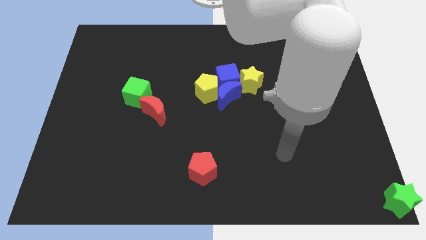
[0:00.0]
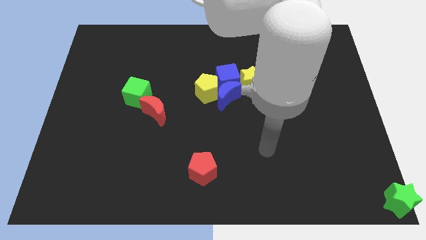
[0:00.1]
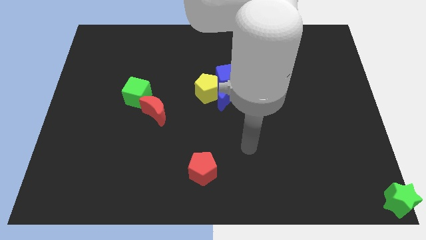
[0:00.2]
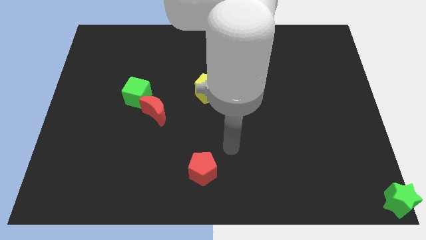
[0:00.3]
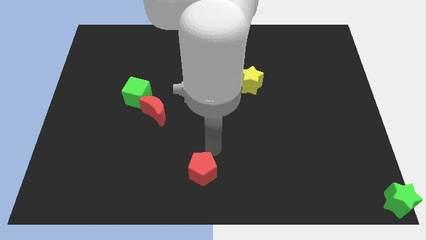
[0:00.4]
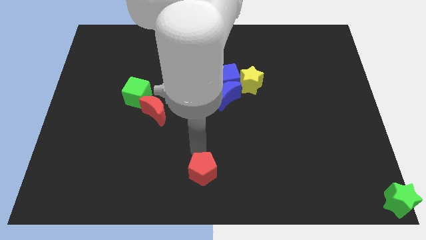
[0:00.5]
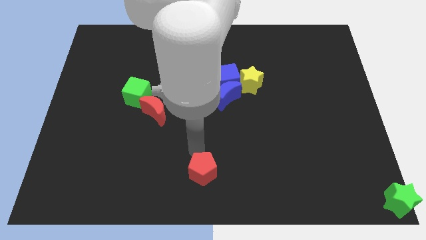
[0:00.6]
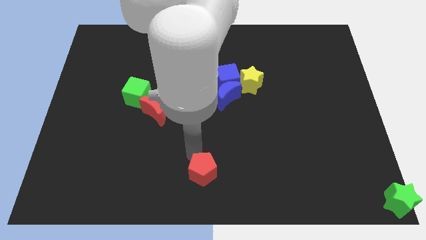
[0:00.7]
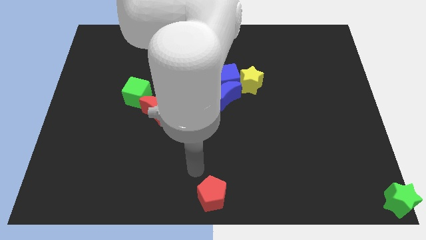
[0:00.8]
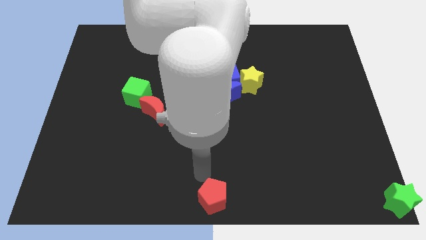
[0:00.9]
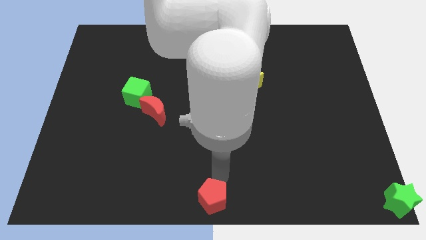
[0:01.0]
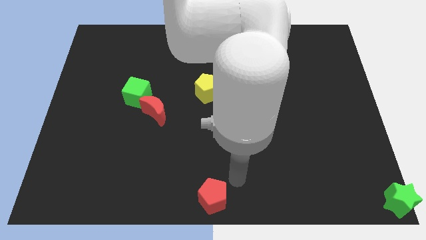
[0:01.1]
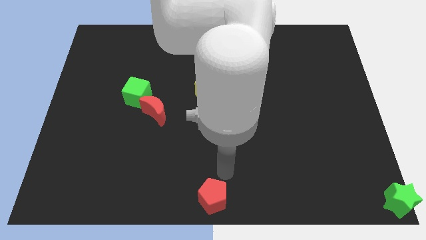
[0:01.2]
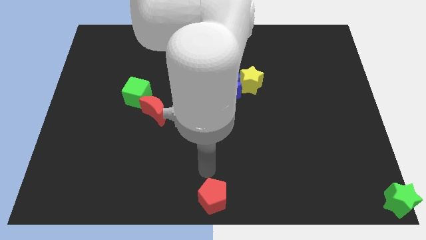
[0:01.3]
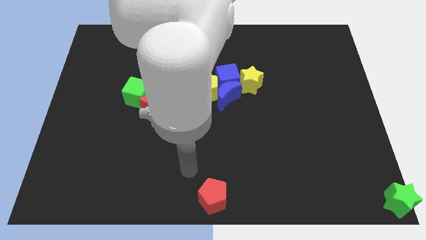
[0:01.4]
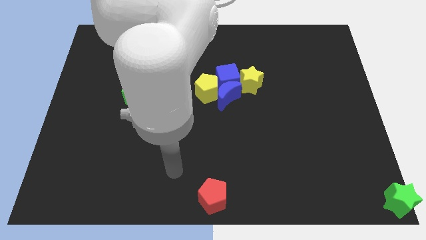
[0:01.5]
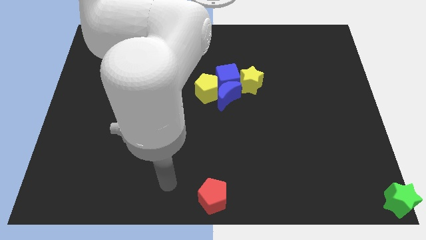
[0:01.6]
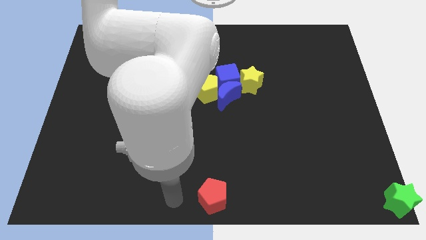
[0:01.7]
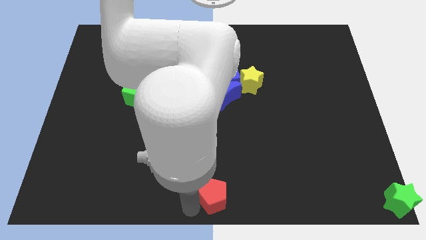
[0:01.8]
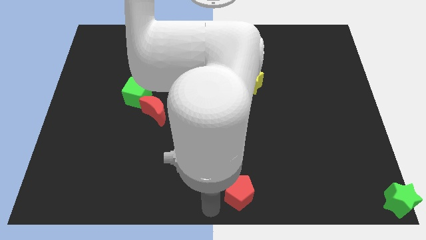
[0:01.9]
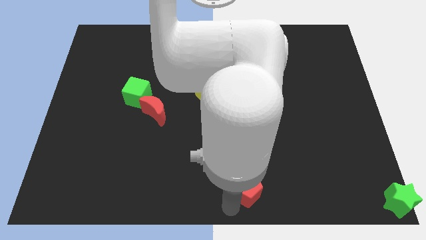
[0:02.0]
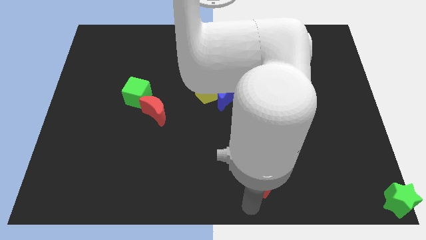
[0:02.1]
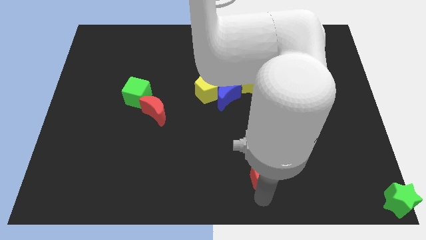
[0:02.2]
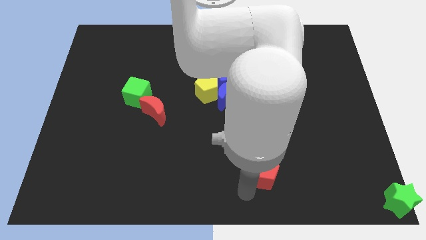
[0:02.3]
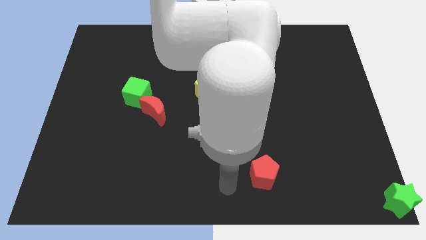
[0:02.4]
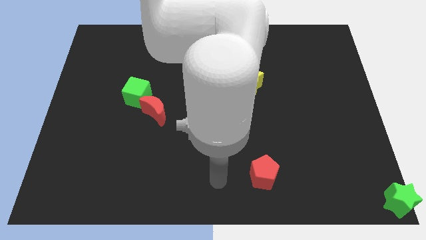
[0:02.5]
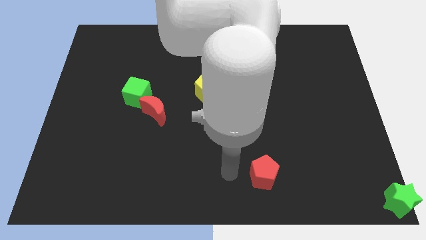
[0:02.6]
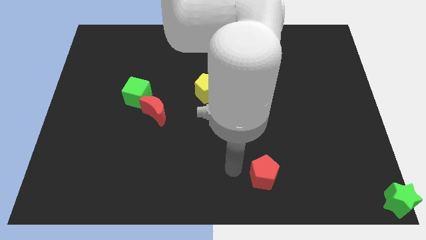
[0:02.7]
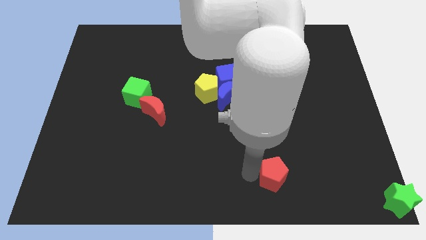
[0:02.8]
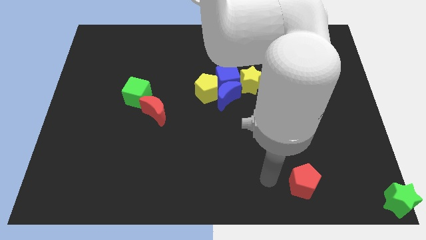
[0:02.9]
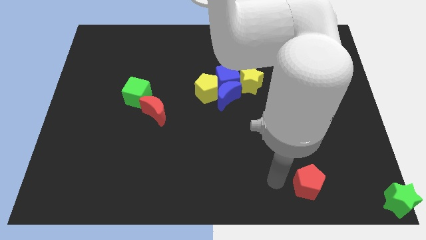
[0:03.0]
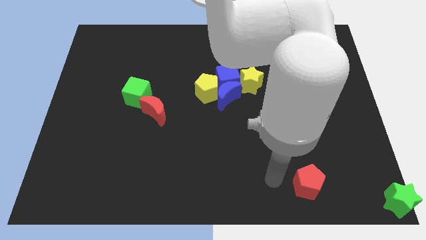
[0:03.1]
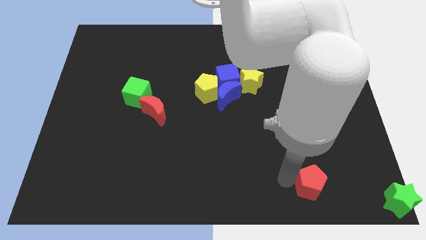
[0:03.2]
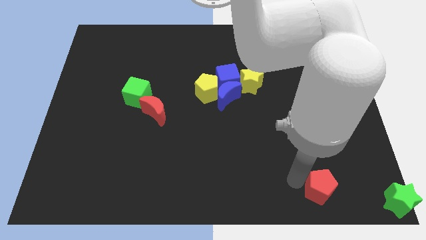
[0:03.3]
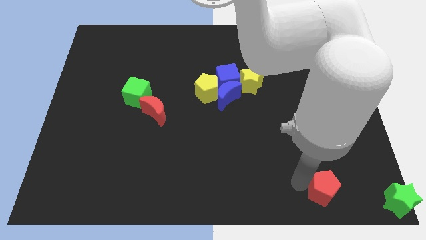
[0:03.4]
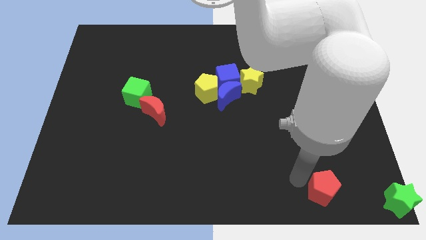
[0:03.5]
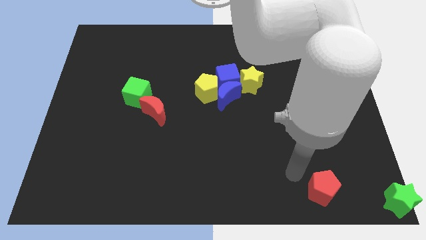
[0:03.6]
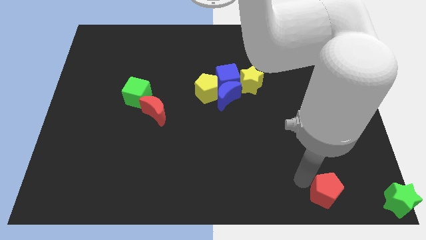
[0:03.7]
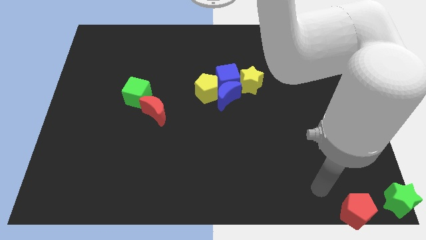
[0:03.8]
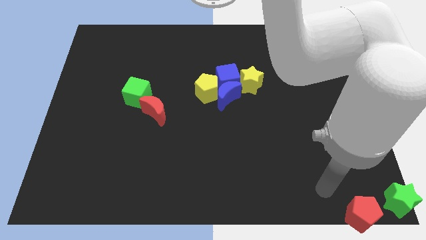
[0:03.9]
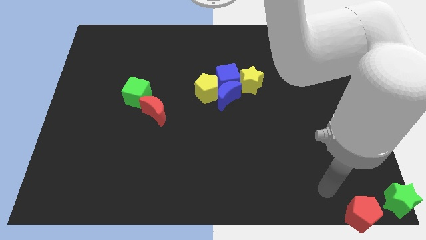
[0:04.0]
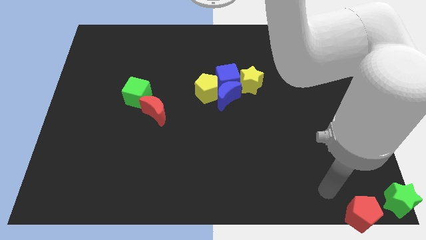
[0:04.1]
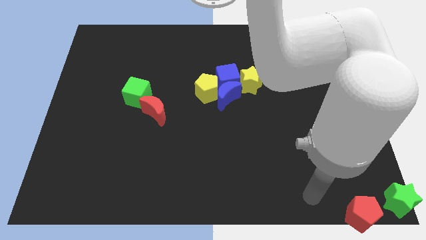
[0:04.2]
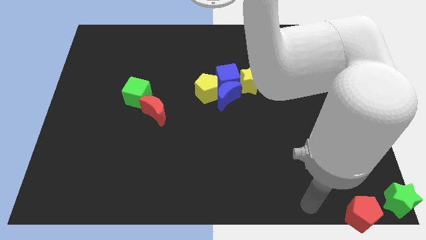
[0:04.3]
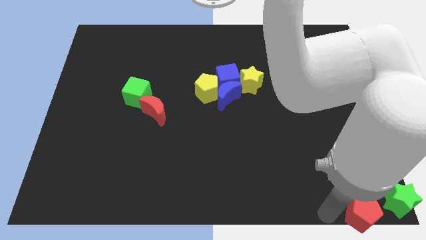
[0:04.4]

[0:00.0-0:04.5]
push red pentagon towards green star

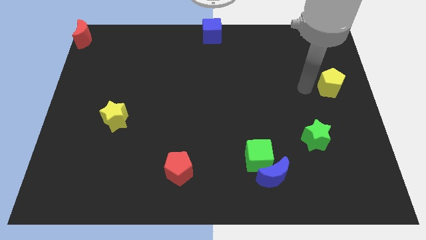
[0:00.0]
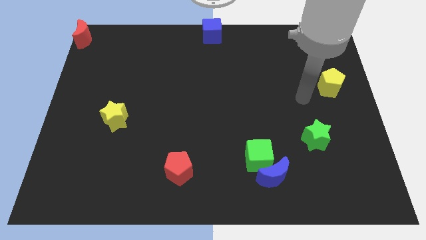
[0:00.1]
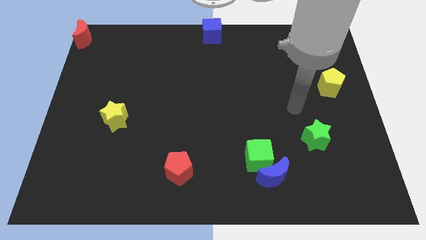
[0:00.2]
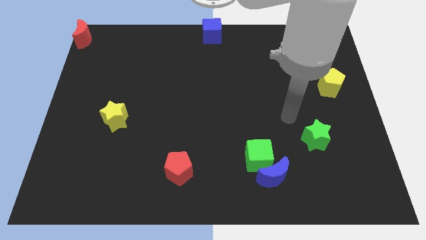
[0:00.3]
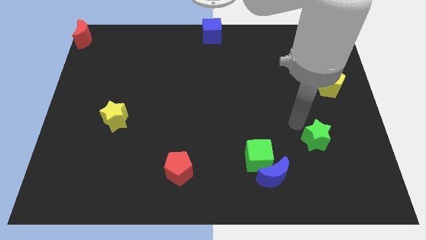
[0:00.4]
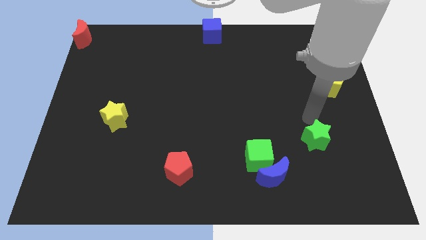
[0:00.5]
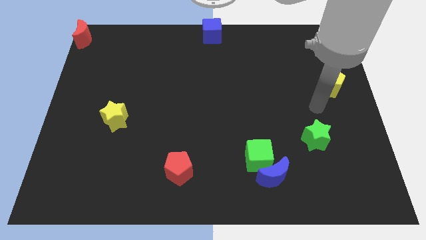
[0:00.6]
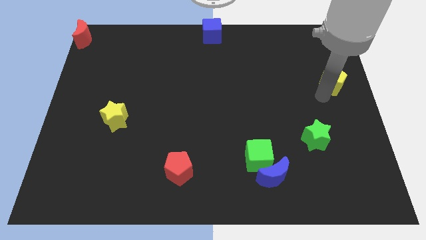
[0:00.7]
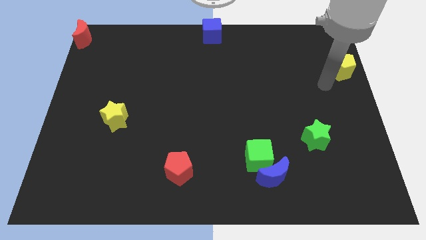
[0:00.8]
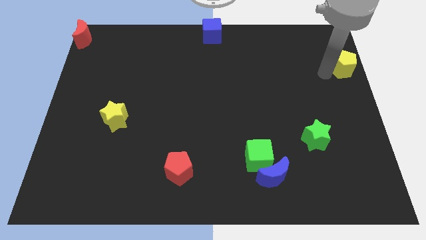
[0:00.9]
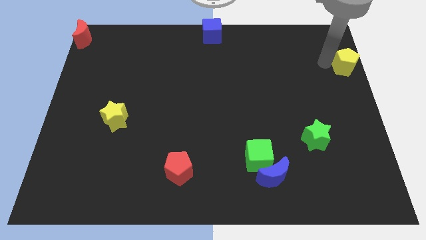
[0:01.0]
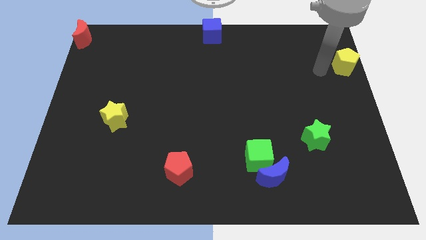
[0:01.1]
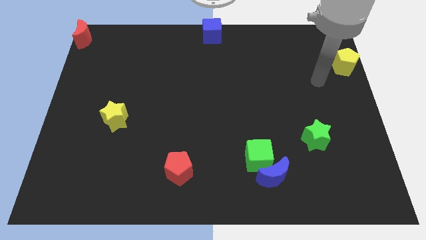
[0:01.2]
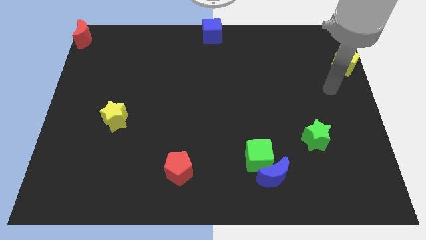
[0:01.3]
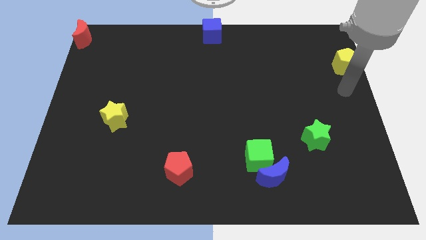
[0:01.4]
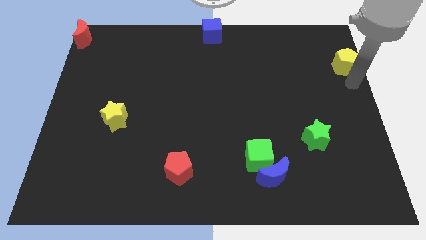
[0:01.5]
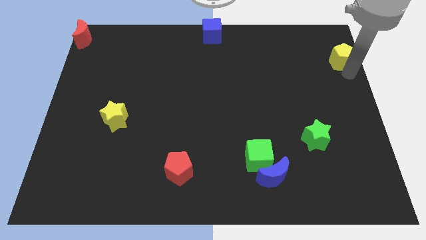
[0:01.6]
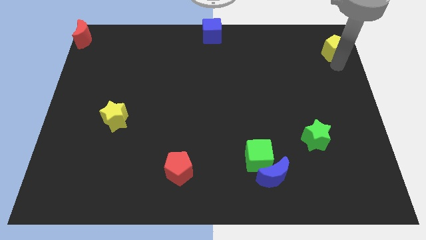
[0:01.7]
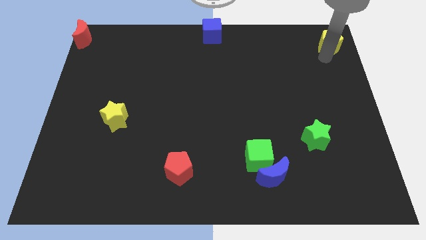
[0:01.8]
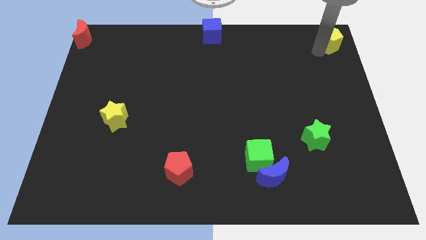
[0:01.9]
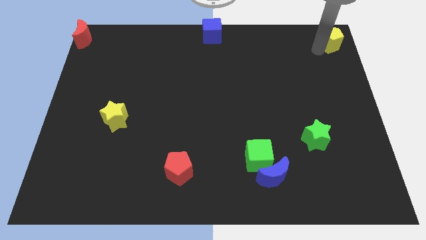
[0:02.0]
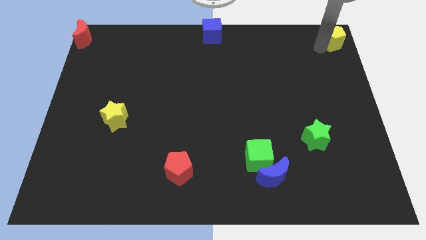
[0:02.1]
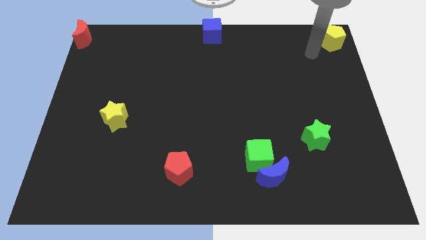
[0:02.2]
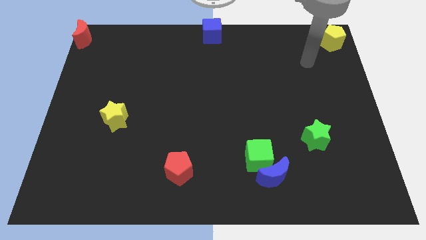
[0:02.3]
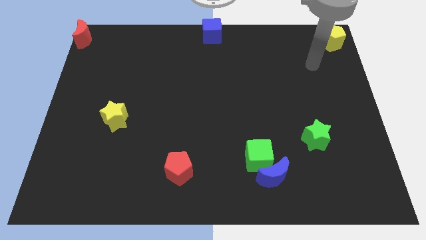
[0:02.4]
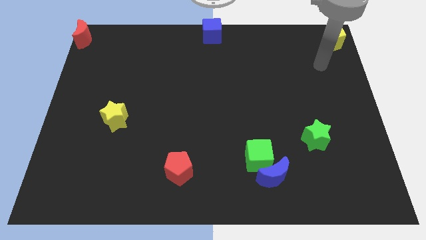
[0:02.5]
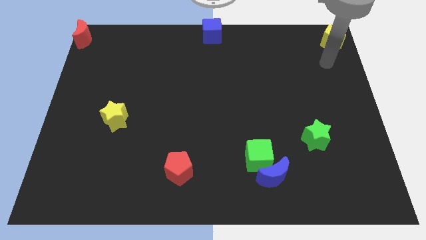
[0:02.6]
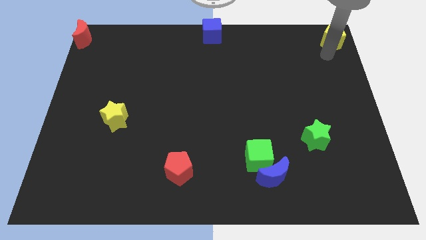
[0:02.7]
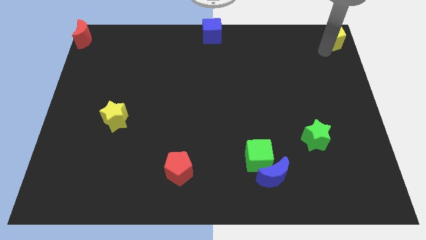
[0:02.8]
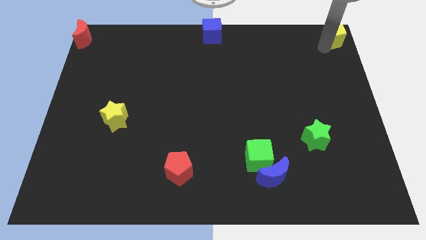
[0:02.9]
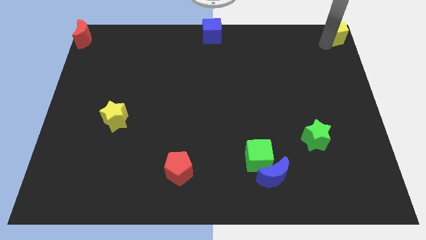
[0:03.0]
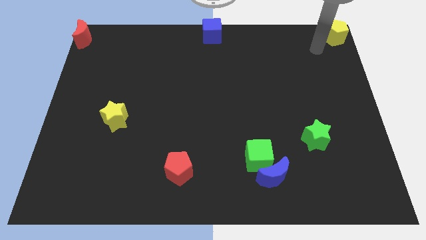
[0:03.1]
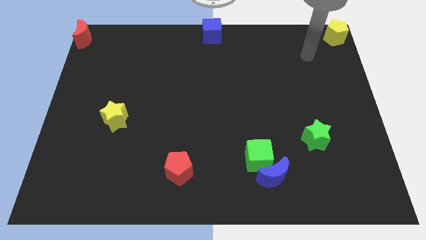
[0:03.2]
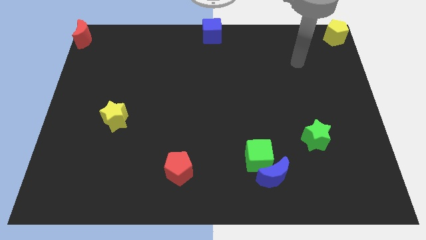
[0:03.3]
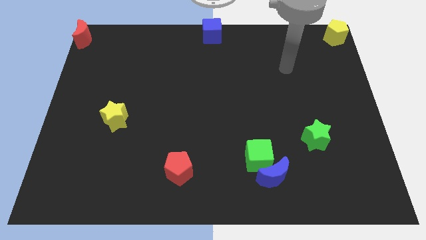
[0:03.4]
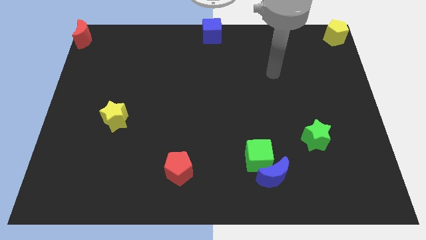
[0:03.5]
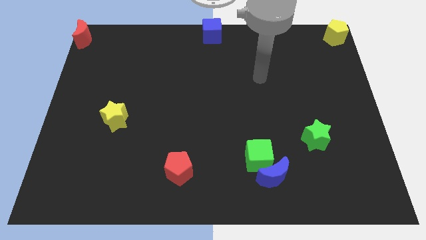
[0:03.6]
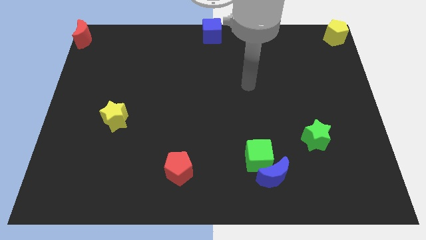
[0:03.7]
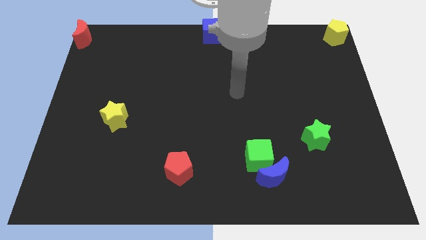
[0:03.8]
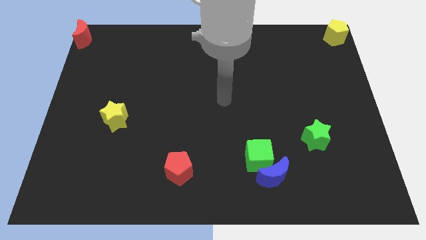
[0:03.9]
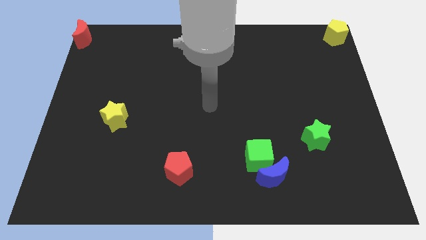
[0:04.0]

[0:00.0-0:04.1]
move the yellow pentagon to the top right corner

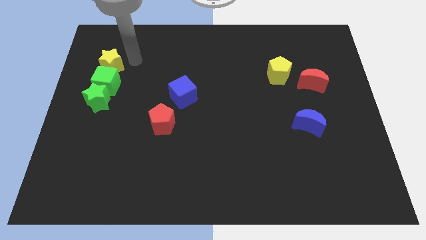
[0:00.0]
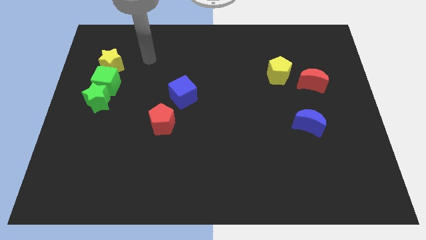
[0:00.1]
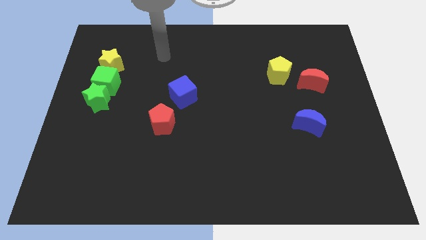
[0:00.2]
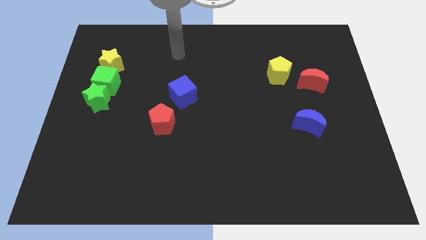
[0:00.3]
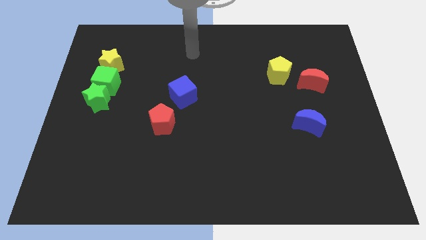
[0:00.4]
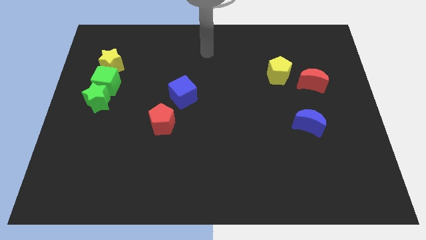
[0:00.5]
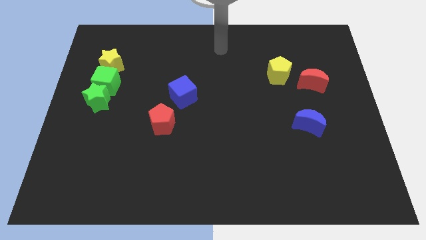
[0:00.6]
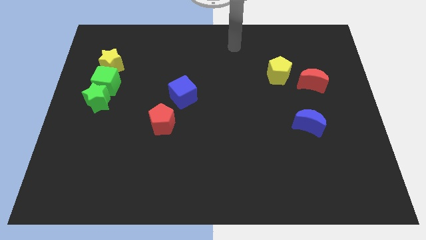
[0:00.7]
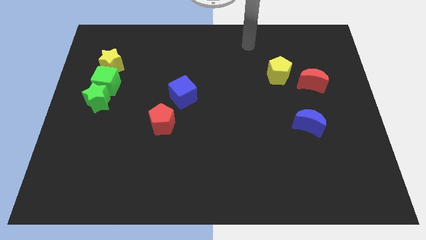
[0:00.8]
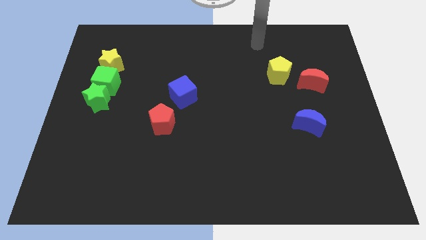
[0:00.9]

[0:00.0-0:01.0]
move your hand away from the yellow star
